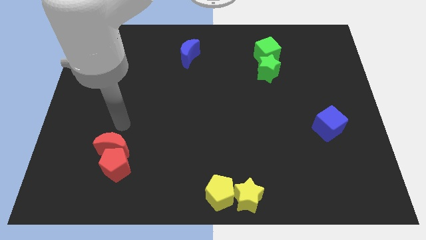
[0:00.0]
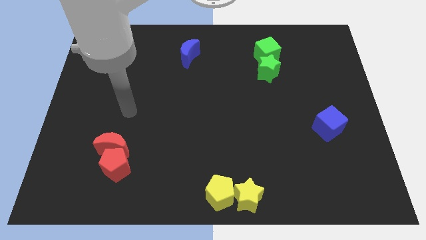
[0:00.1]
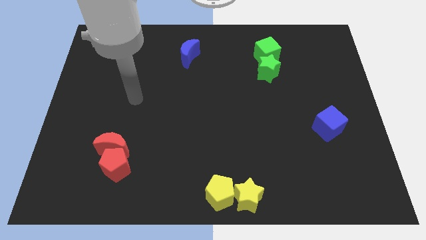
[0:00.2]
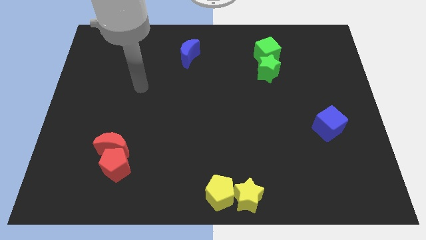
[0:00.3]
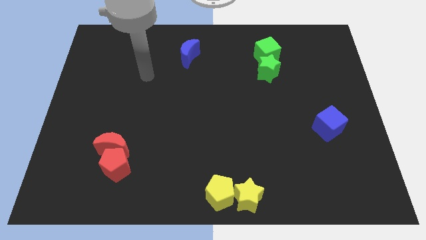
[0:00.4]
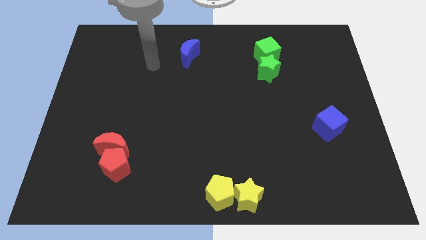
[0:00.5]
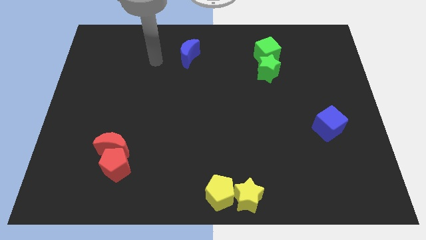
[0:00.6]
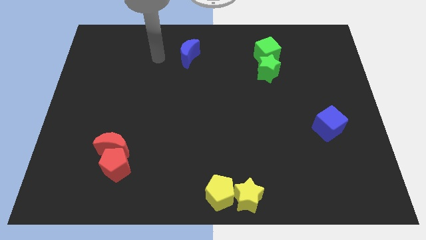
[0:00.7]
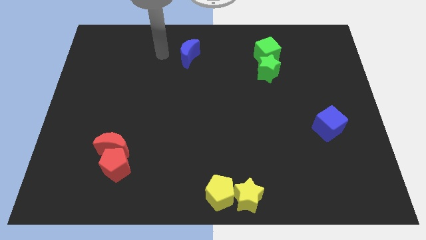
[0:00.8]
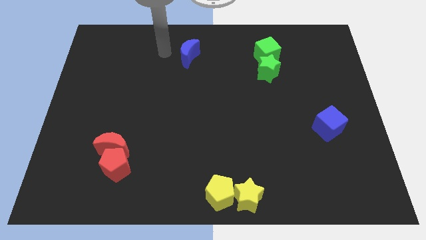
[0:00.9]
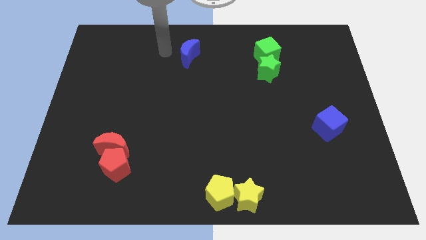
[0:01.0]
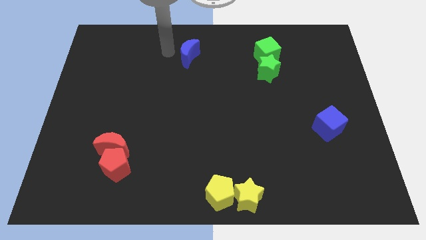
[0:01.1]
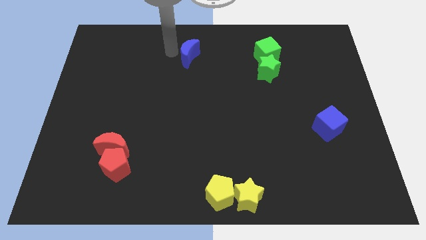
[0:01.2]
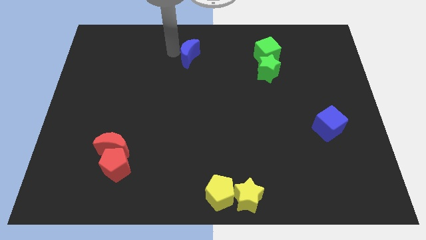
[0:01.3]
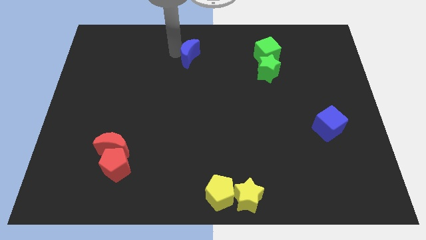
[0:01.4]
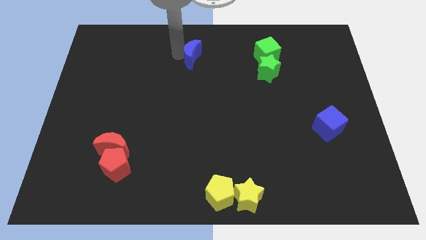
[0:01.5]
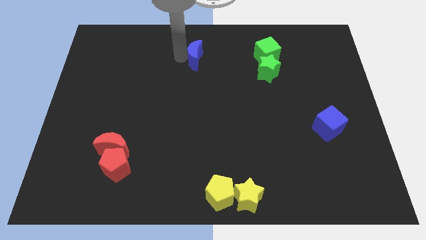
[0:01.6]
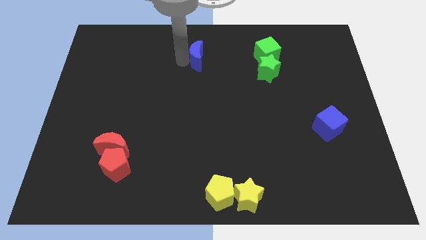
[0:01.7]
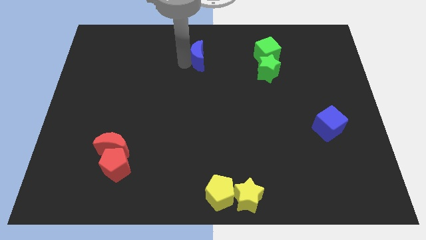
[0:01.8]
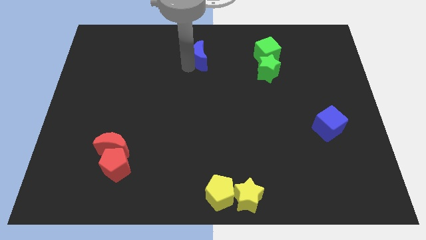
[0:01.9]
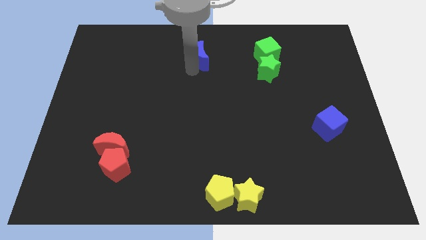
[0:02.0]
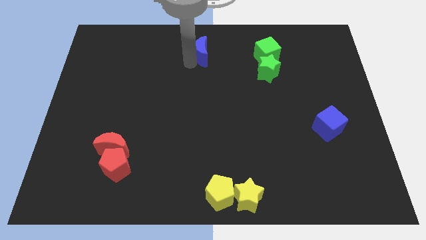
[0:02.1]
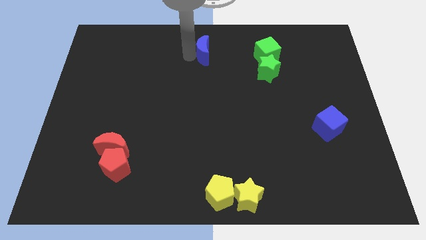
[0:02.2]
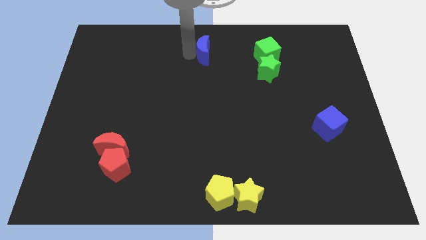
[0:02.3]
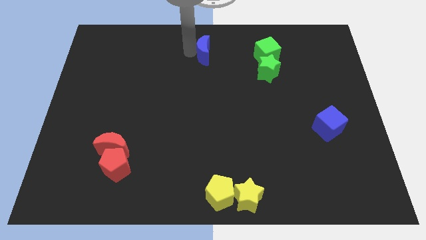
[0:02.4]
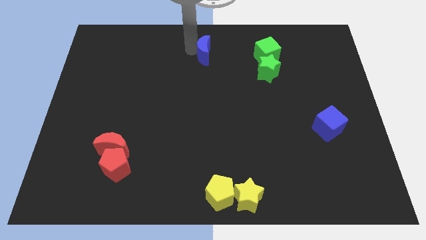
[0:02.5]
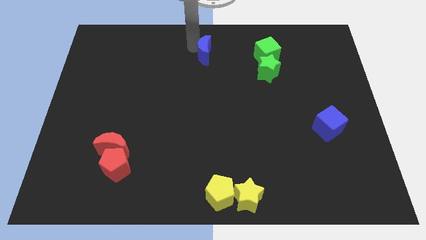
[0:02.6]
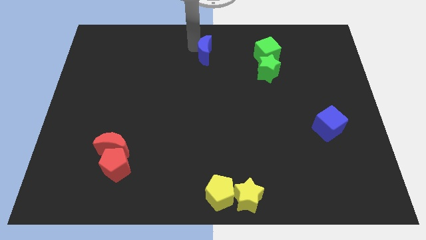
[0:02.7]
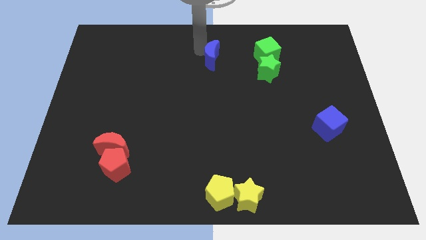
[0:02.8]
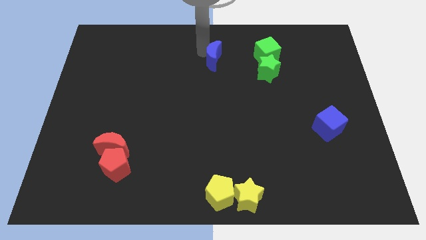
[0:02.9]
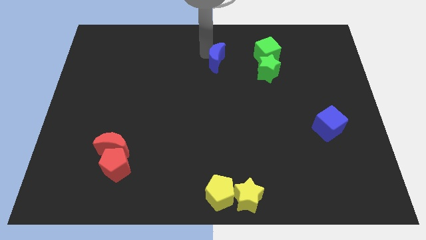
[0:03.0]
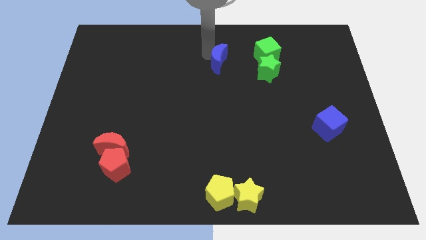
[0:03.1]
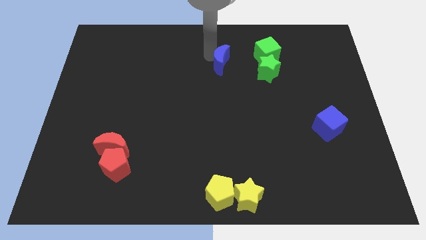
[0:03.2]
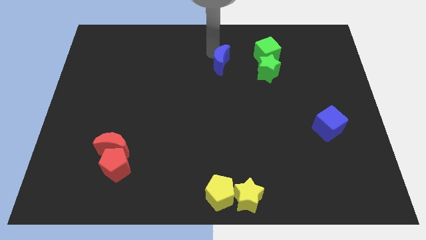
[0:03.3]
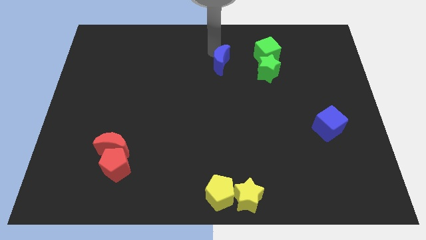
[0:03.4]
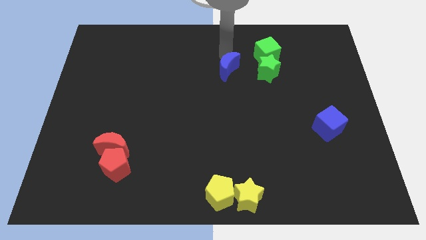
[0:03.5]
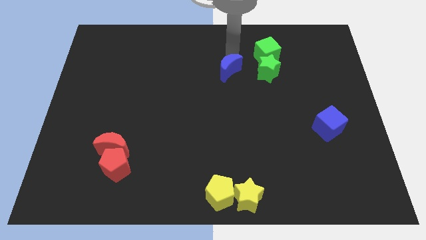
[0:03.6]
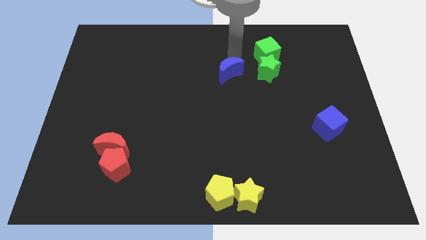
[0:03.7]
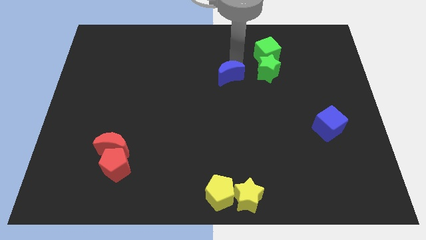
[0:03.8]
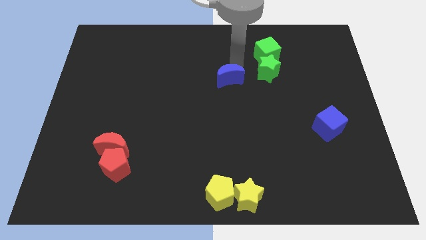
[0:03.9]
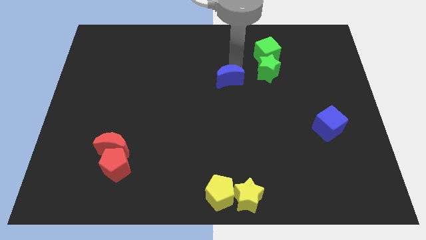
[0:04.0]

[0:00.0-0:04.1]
place the blue crescent above the yellow pentagon

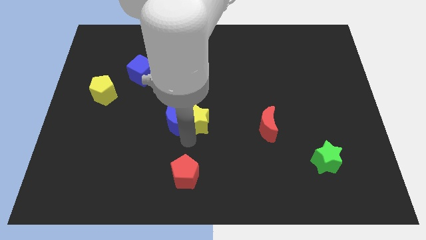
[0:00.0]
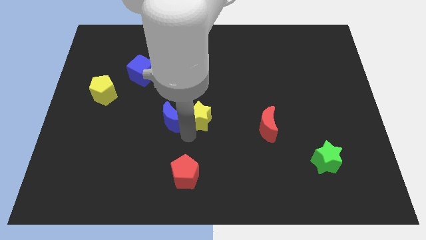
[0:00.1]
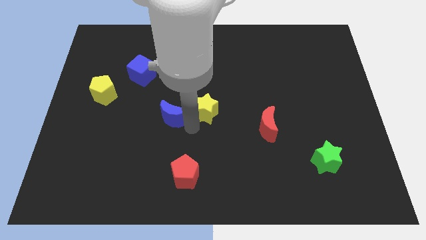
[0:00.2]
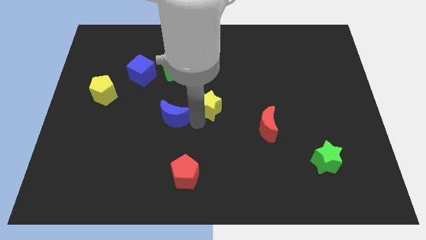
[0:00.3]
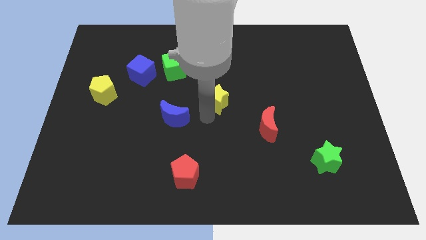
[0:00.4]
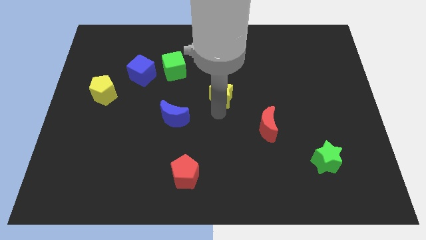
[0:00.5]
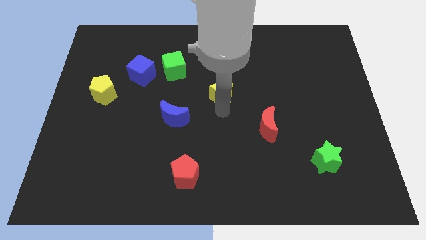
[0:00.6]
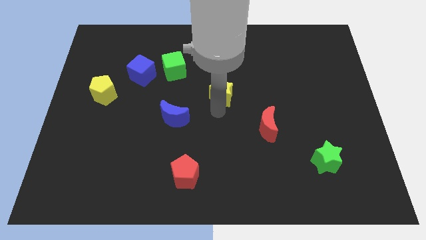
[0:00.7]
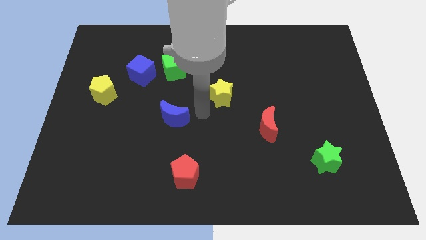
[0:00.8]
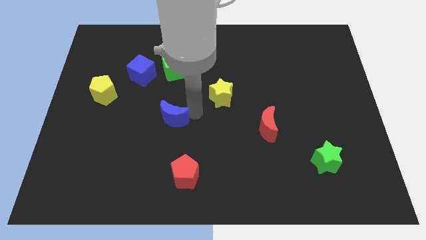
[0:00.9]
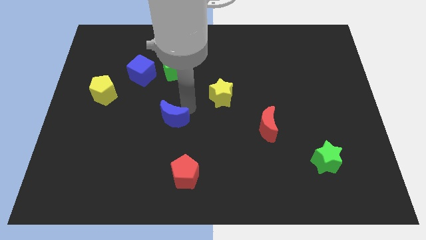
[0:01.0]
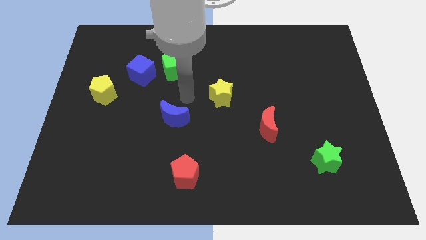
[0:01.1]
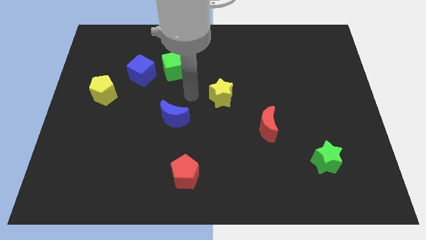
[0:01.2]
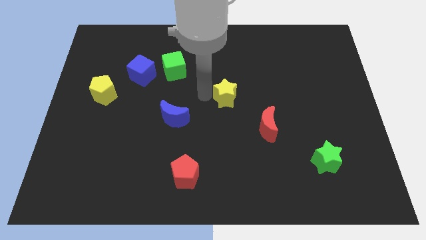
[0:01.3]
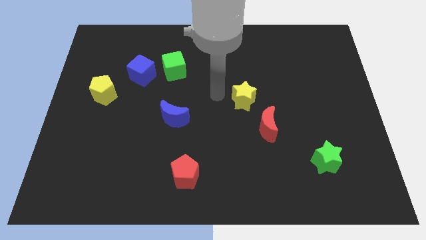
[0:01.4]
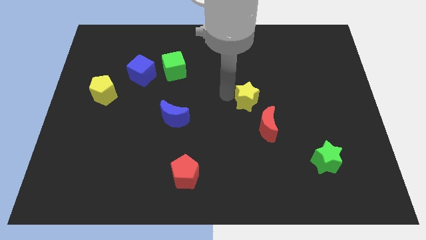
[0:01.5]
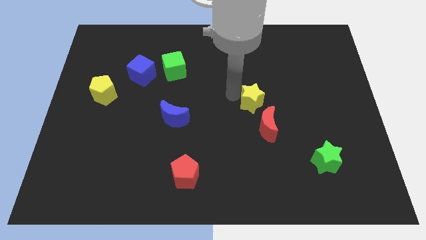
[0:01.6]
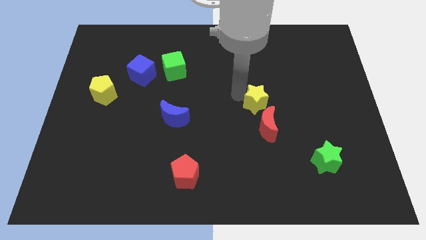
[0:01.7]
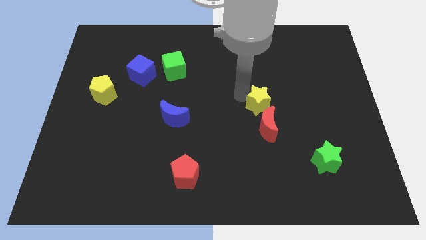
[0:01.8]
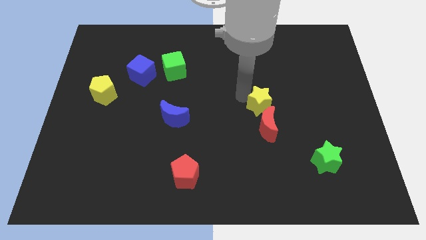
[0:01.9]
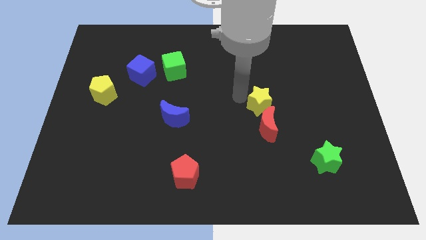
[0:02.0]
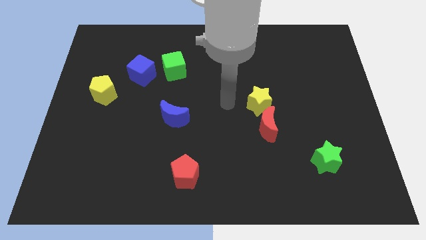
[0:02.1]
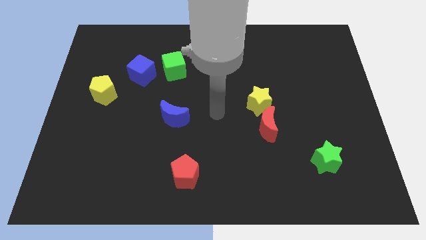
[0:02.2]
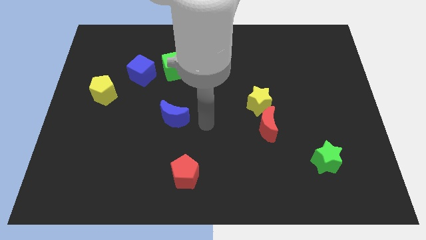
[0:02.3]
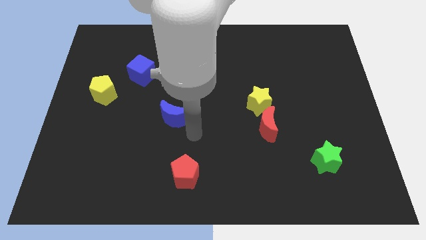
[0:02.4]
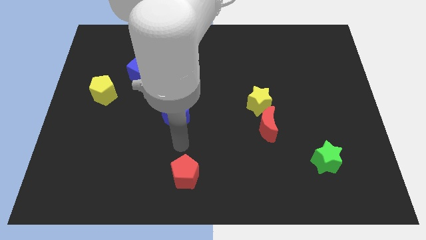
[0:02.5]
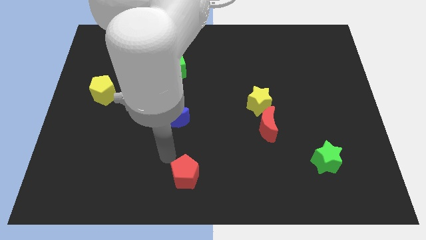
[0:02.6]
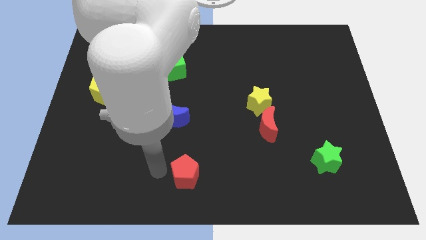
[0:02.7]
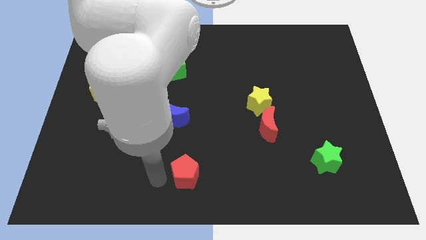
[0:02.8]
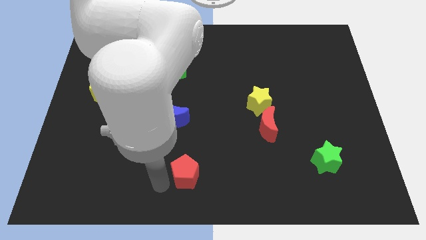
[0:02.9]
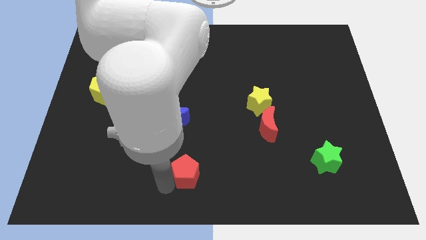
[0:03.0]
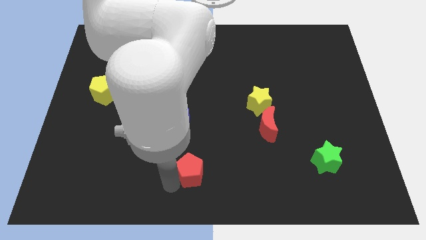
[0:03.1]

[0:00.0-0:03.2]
put the yellow pentagon vertically above the red moon

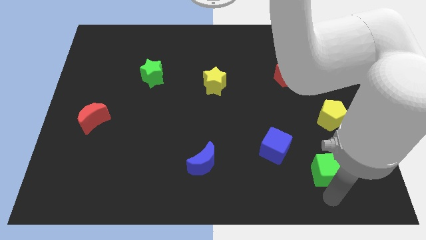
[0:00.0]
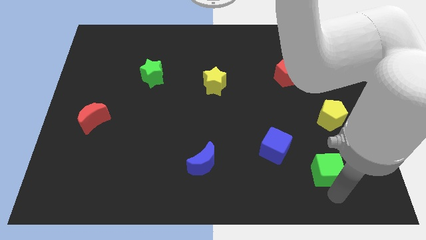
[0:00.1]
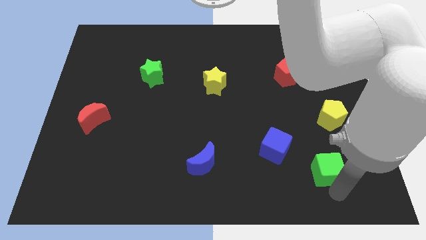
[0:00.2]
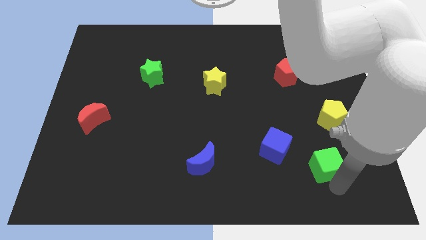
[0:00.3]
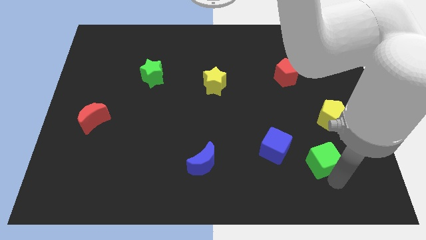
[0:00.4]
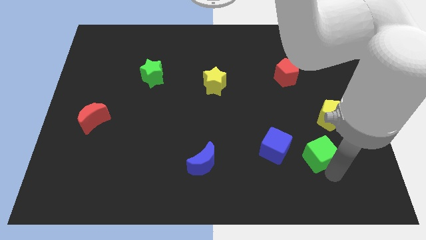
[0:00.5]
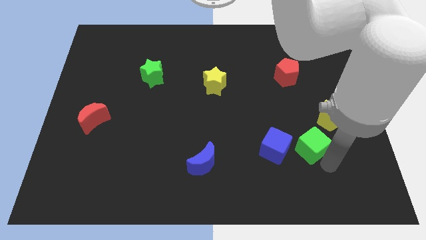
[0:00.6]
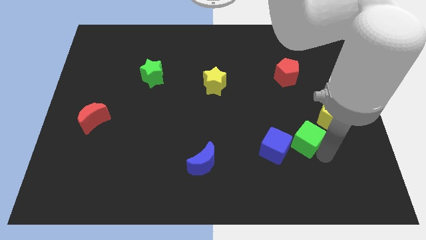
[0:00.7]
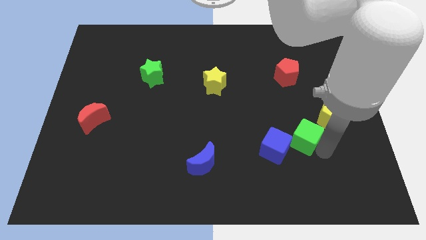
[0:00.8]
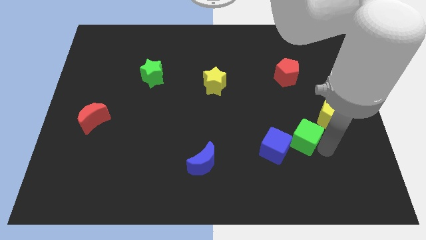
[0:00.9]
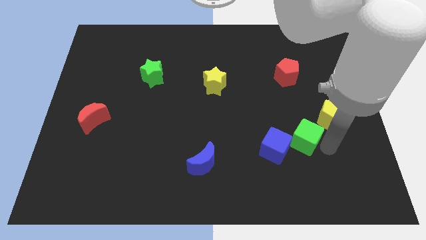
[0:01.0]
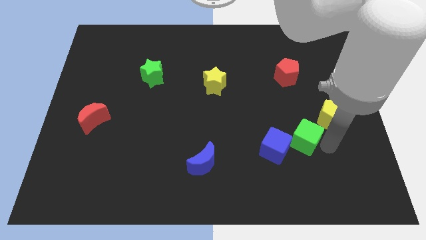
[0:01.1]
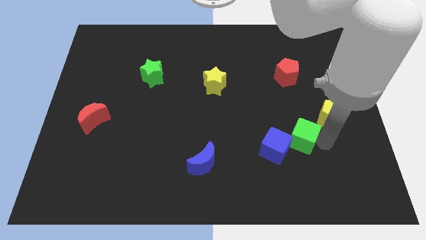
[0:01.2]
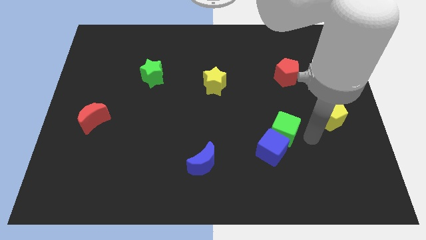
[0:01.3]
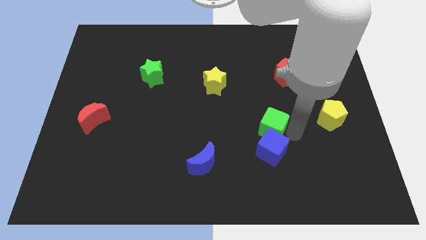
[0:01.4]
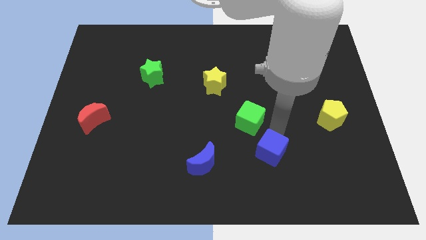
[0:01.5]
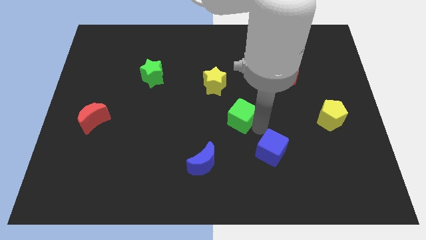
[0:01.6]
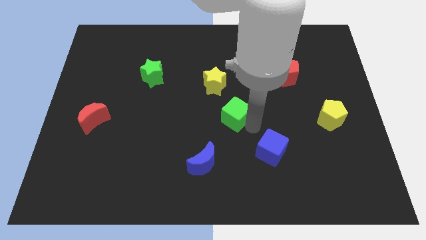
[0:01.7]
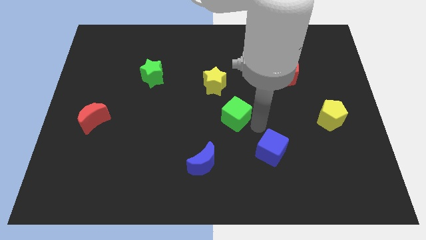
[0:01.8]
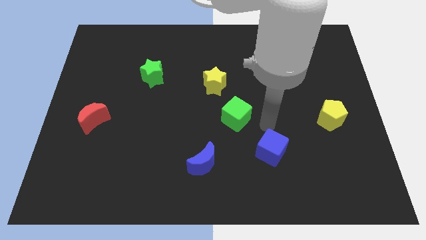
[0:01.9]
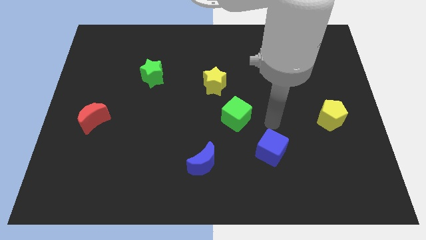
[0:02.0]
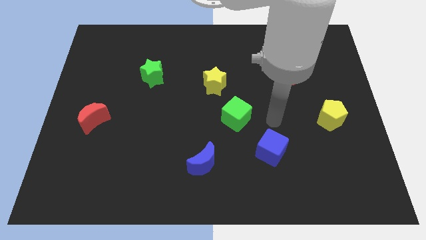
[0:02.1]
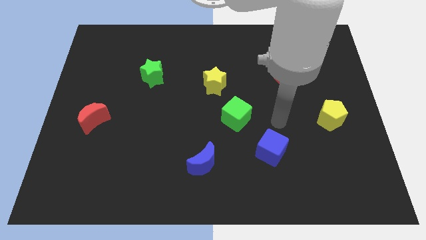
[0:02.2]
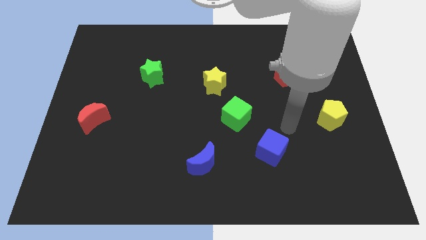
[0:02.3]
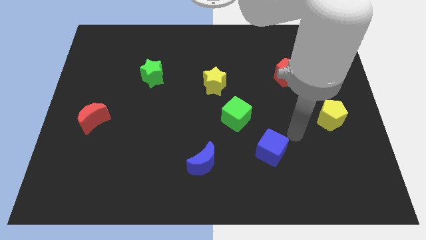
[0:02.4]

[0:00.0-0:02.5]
move the green cube slightly towards the center of the board
